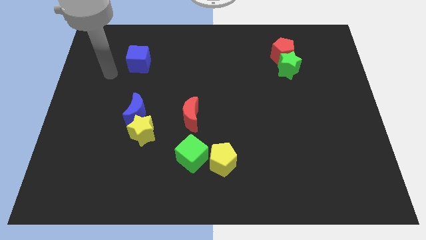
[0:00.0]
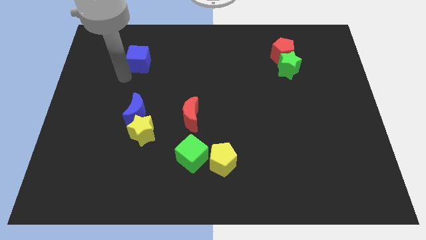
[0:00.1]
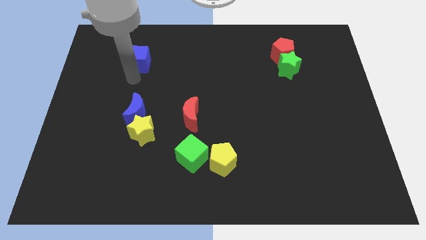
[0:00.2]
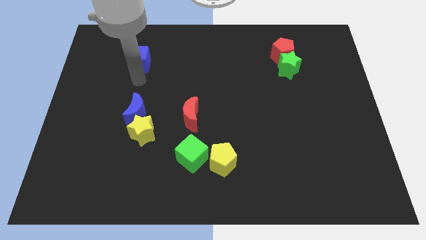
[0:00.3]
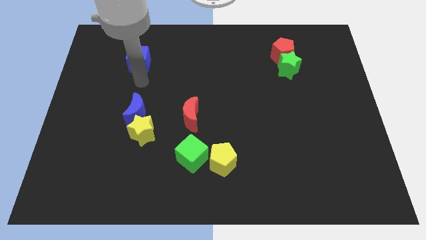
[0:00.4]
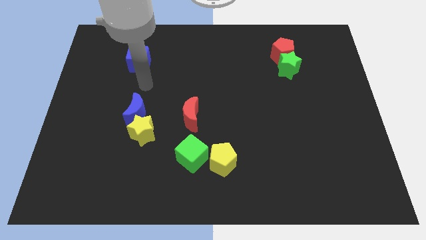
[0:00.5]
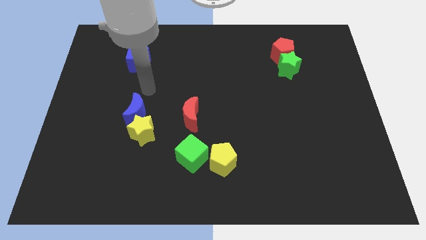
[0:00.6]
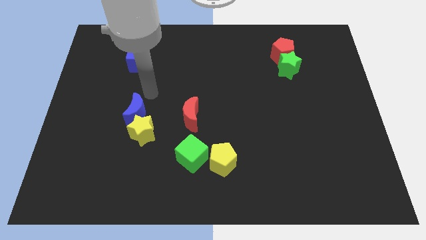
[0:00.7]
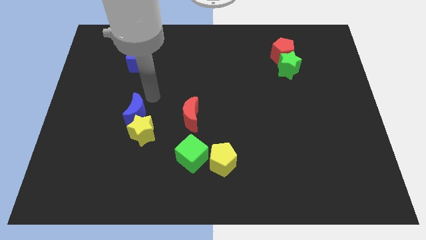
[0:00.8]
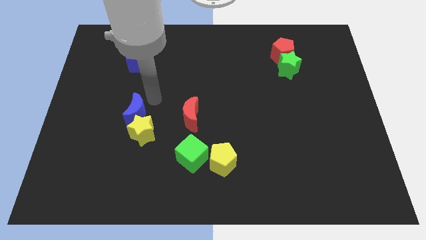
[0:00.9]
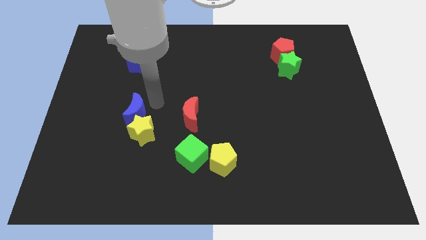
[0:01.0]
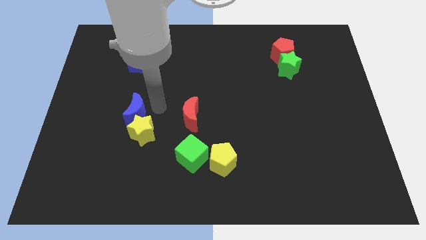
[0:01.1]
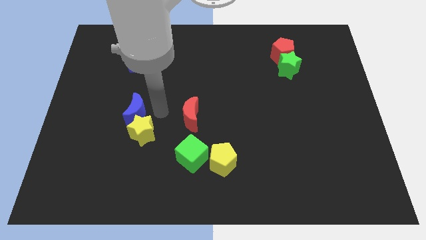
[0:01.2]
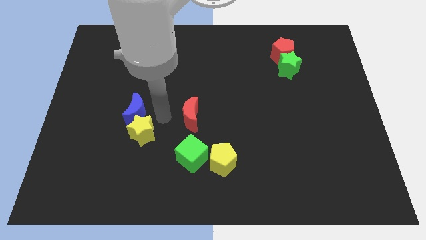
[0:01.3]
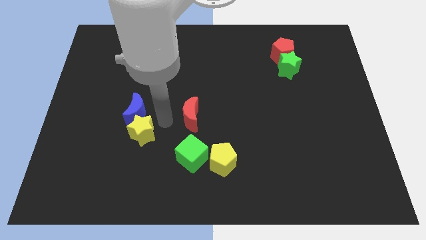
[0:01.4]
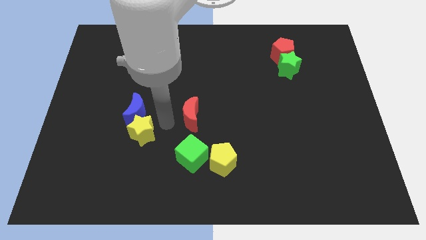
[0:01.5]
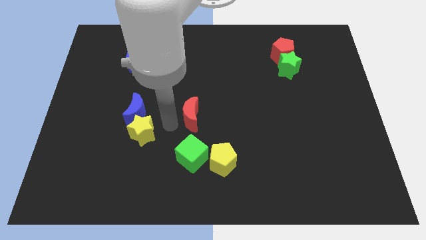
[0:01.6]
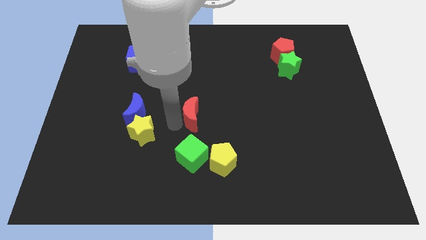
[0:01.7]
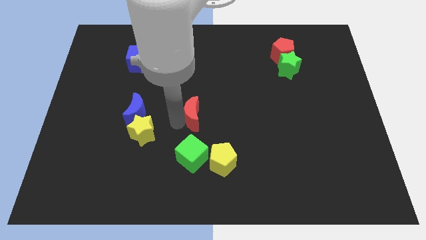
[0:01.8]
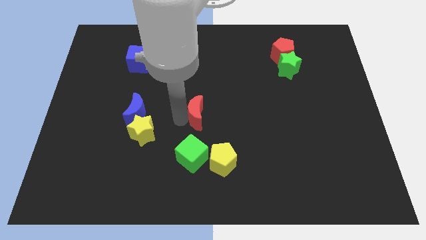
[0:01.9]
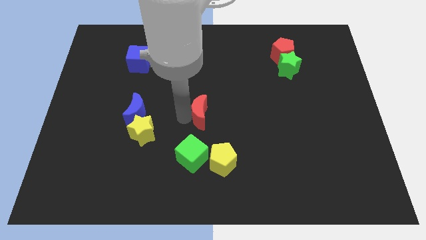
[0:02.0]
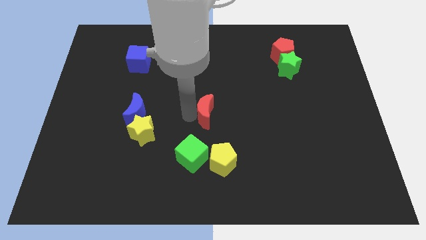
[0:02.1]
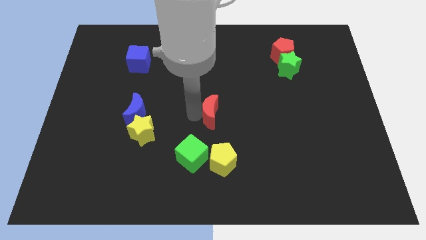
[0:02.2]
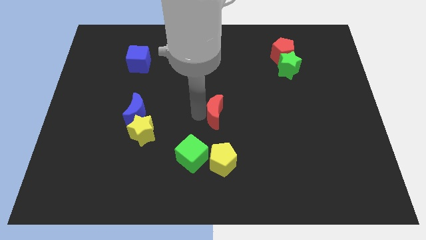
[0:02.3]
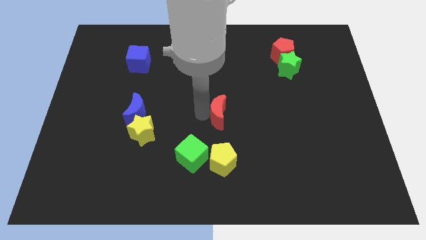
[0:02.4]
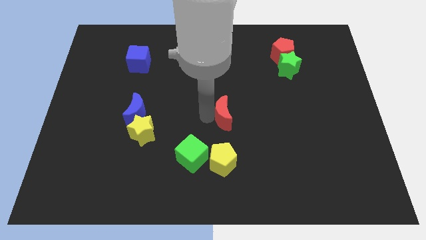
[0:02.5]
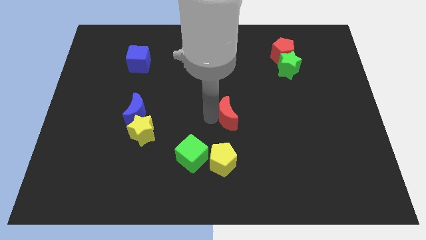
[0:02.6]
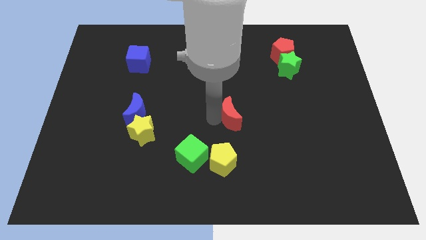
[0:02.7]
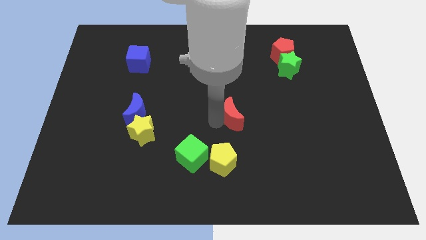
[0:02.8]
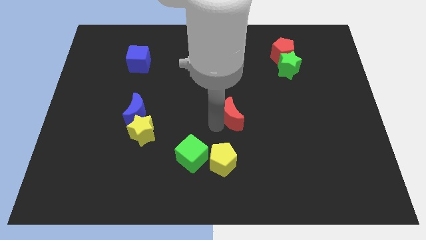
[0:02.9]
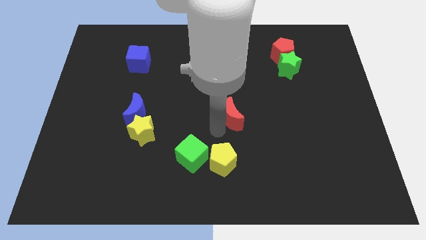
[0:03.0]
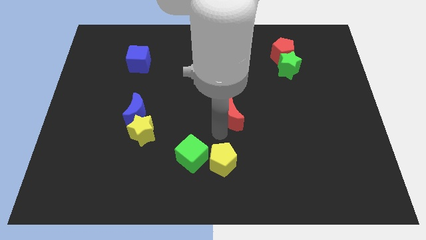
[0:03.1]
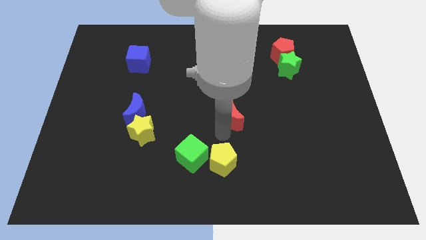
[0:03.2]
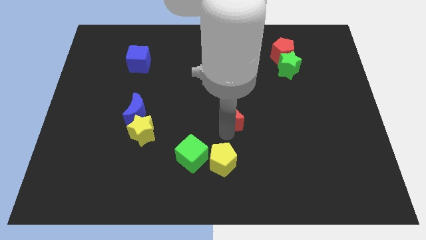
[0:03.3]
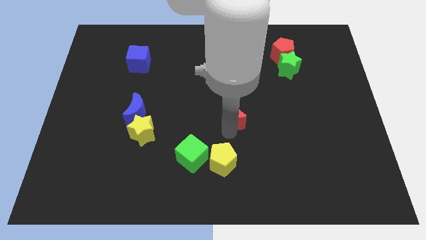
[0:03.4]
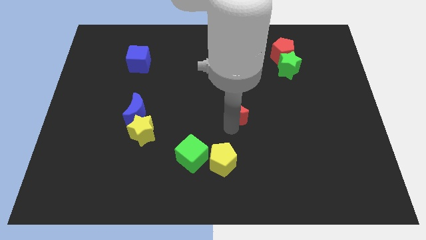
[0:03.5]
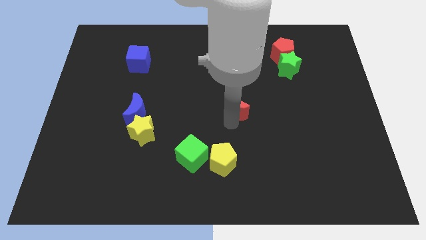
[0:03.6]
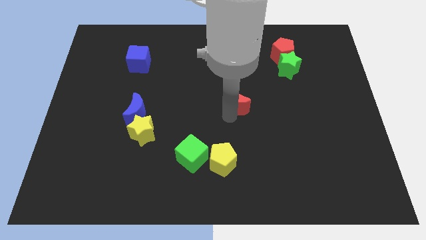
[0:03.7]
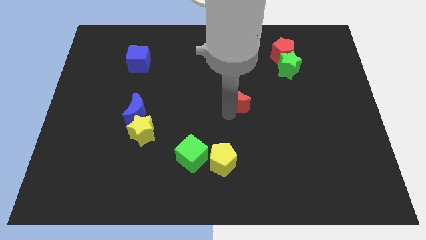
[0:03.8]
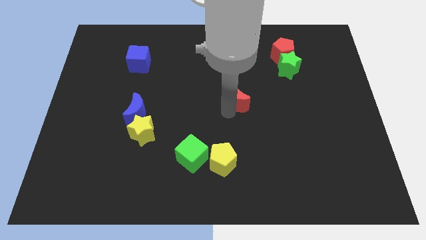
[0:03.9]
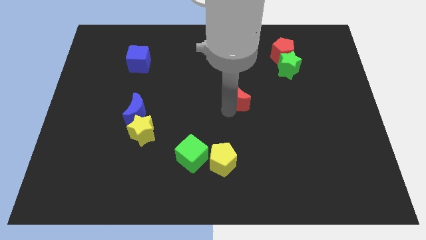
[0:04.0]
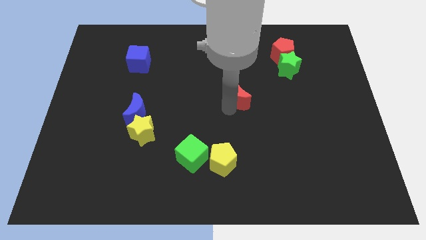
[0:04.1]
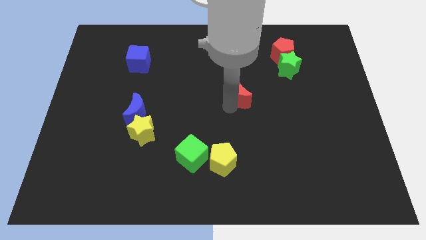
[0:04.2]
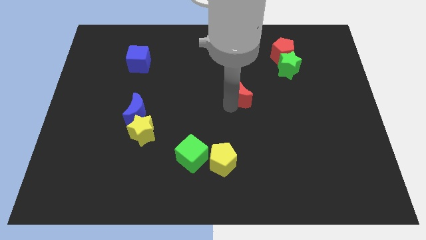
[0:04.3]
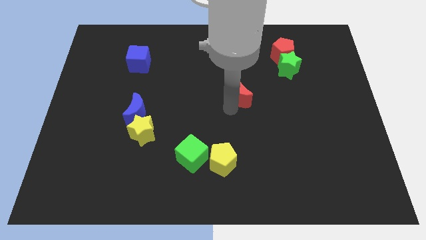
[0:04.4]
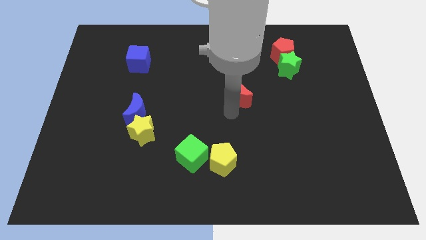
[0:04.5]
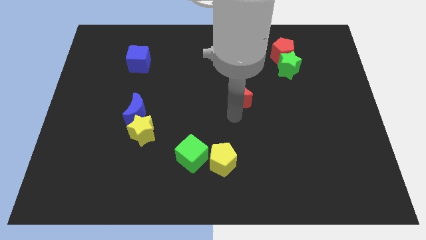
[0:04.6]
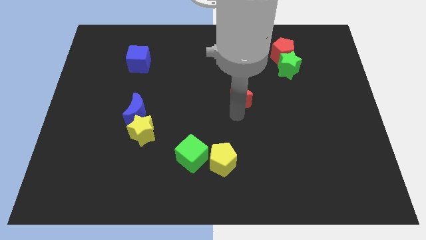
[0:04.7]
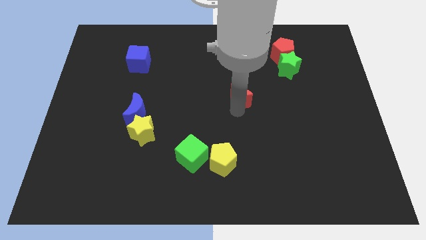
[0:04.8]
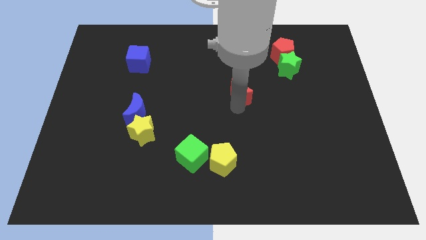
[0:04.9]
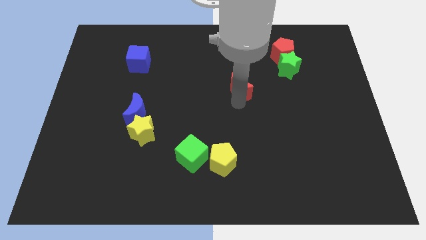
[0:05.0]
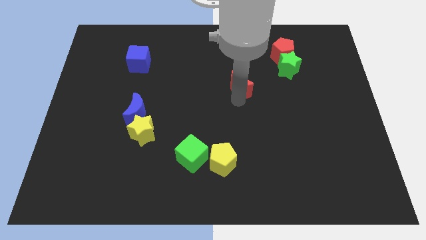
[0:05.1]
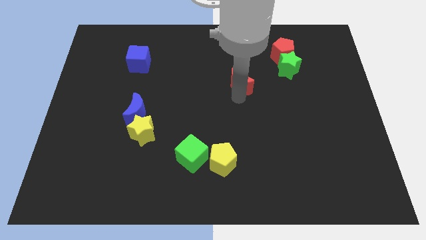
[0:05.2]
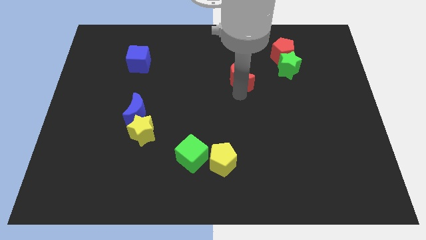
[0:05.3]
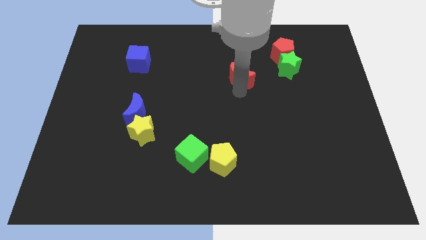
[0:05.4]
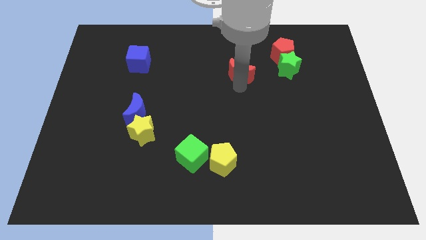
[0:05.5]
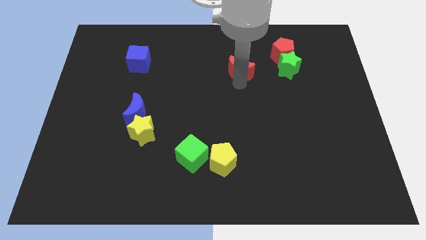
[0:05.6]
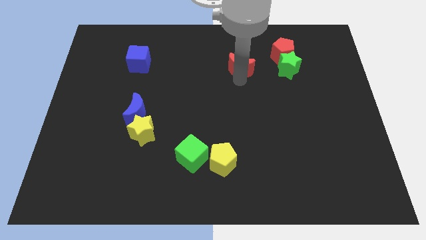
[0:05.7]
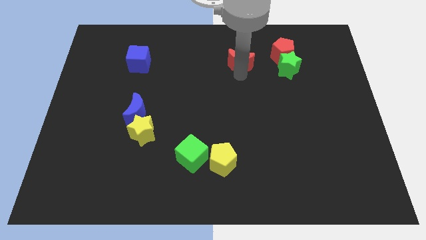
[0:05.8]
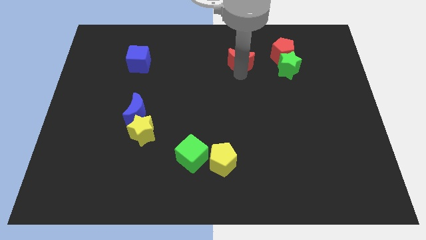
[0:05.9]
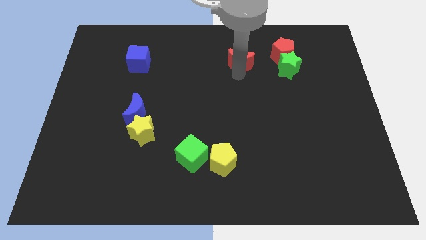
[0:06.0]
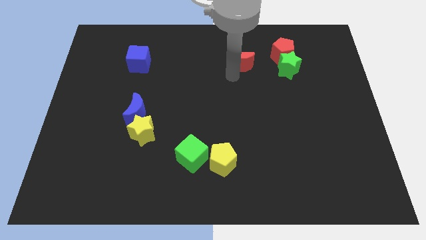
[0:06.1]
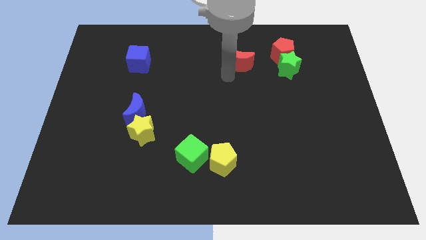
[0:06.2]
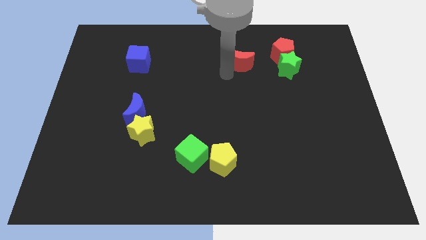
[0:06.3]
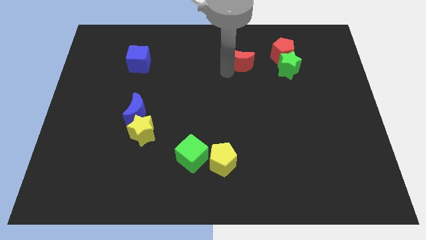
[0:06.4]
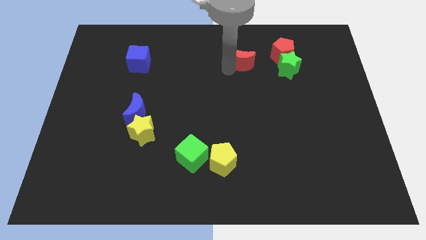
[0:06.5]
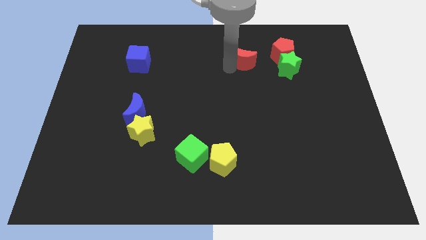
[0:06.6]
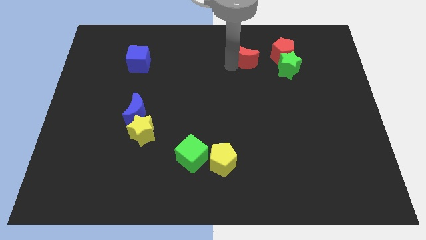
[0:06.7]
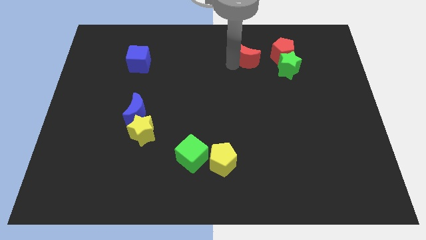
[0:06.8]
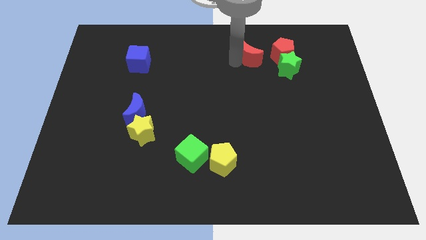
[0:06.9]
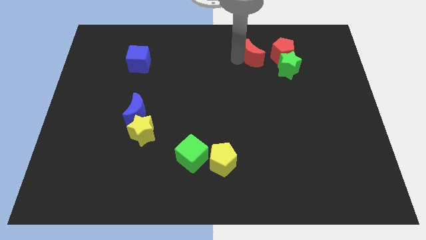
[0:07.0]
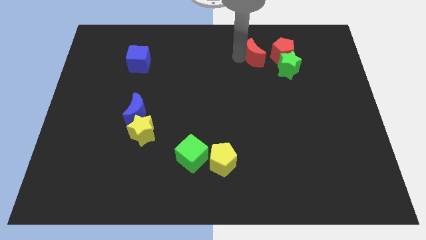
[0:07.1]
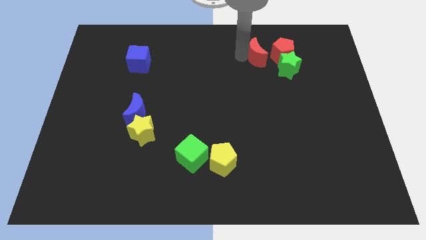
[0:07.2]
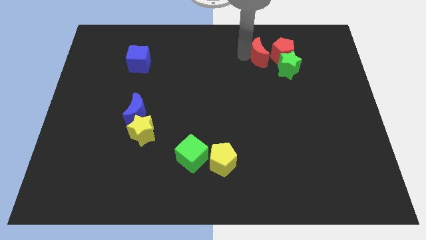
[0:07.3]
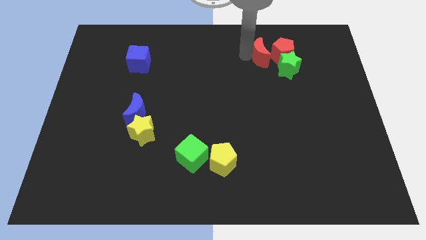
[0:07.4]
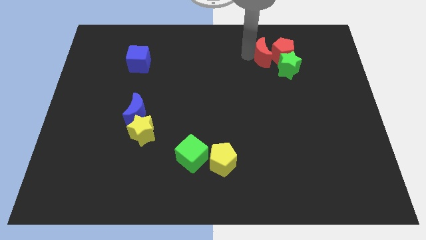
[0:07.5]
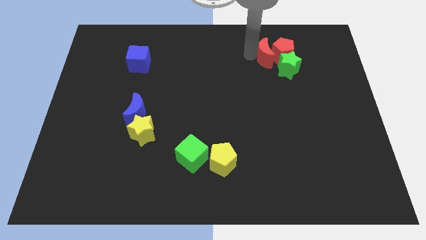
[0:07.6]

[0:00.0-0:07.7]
move the red moon close to the red pentagon
